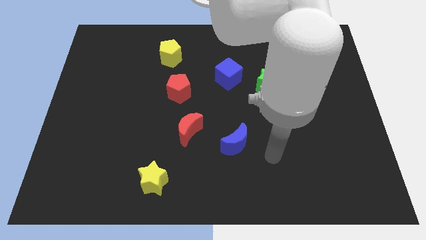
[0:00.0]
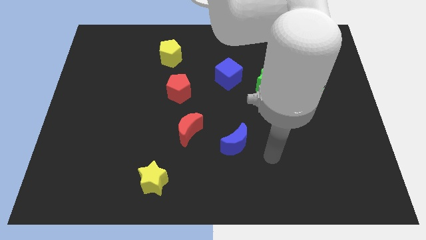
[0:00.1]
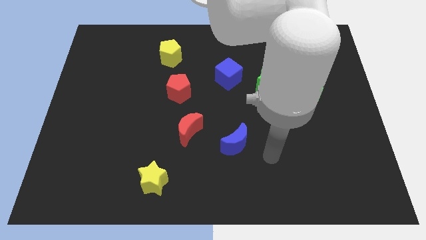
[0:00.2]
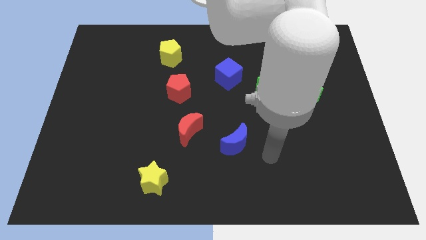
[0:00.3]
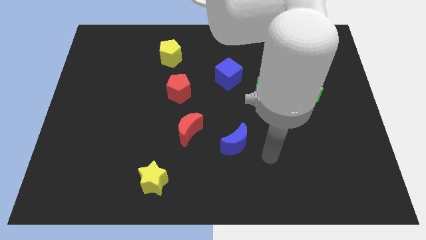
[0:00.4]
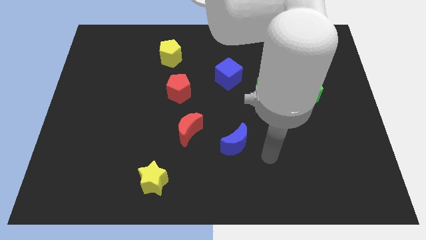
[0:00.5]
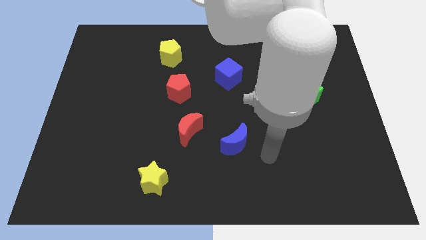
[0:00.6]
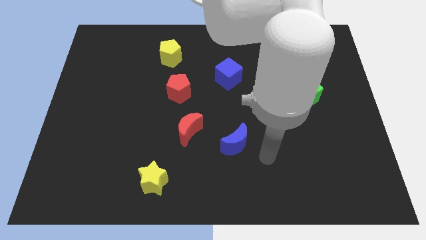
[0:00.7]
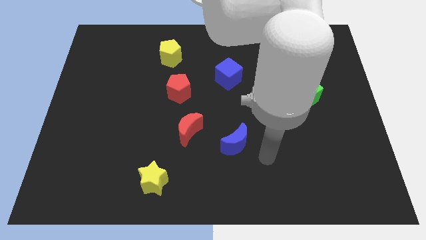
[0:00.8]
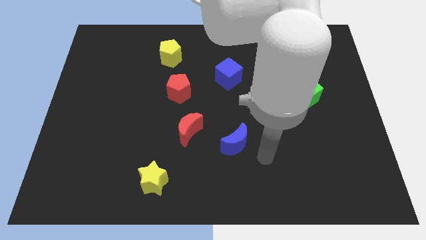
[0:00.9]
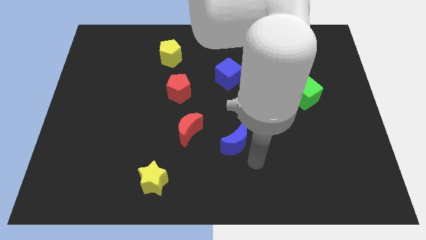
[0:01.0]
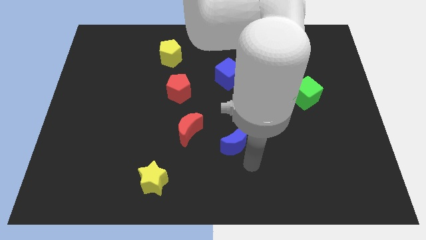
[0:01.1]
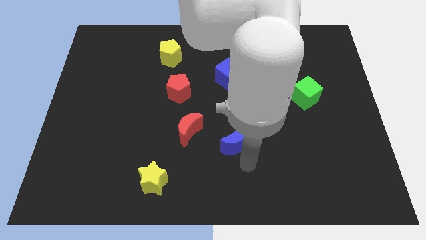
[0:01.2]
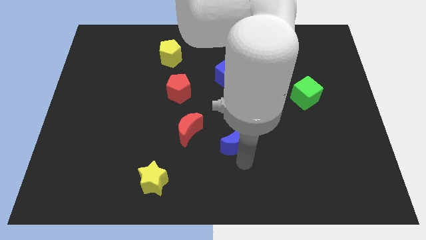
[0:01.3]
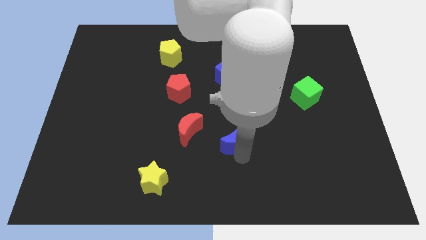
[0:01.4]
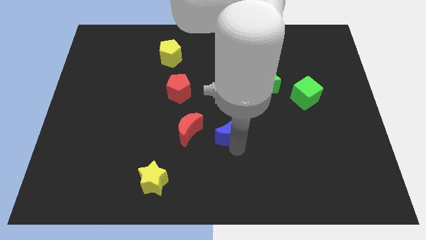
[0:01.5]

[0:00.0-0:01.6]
move the blue crescent slightly to the center of the board

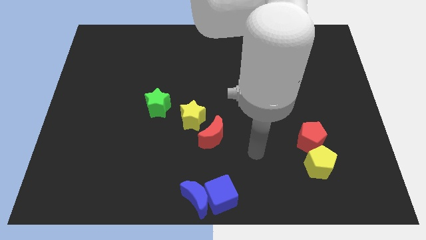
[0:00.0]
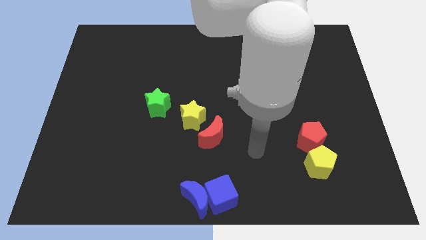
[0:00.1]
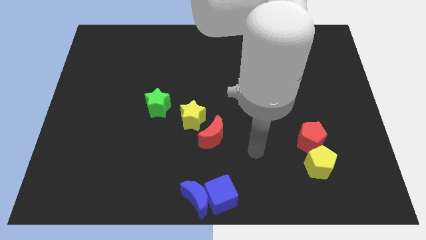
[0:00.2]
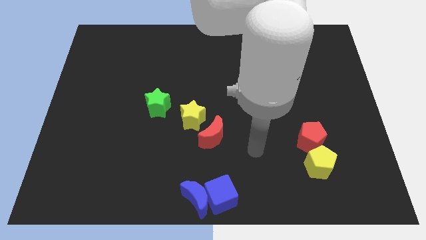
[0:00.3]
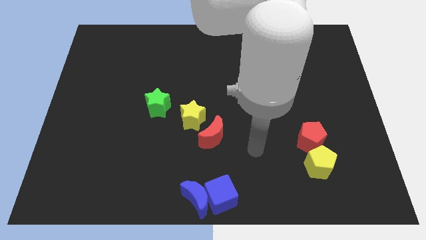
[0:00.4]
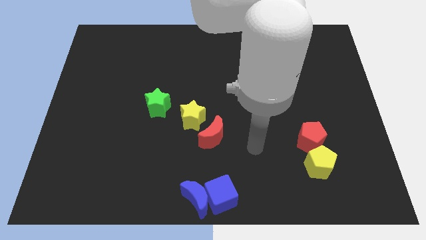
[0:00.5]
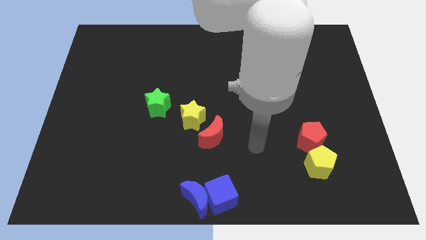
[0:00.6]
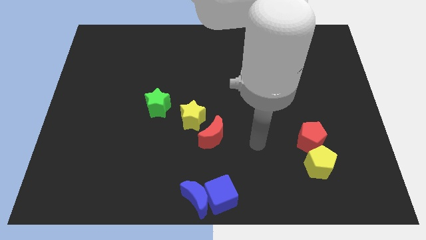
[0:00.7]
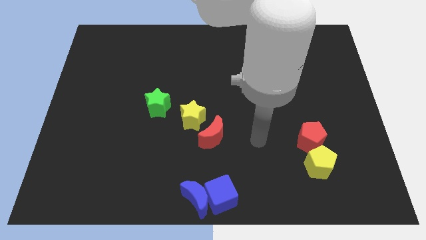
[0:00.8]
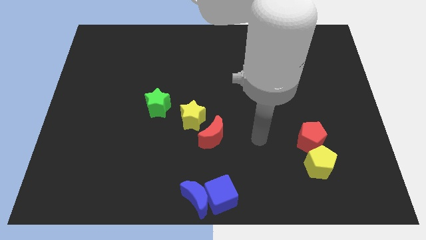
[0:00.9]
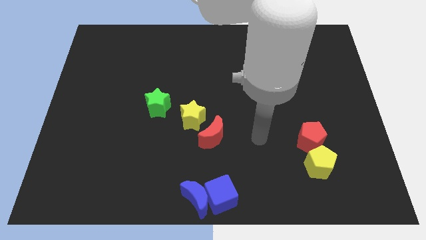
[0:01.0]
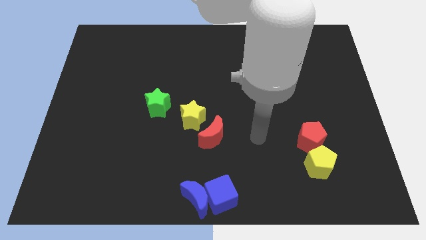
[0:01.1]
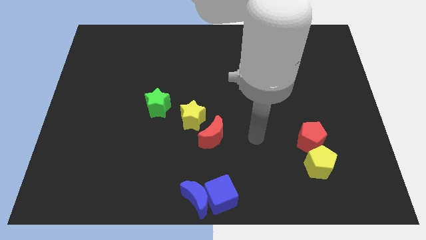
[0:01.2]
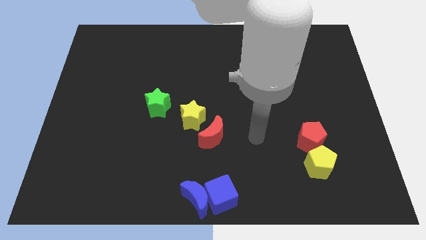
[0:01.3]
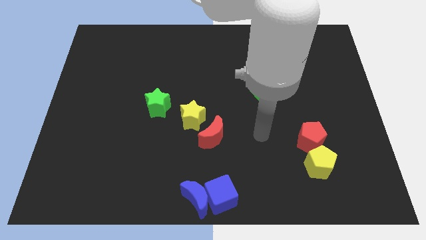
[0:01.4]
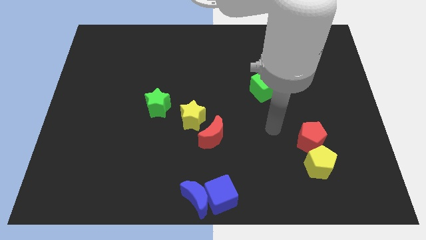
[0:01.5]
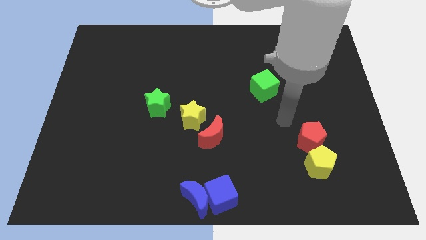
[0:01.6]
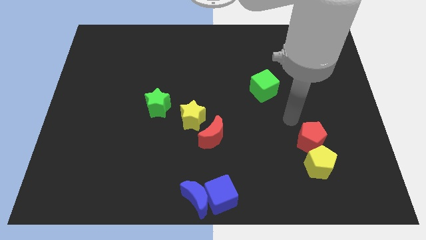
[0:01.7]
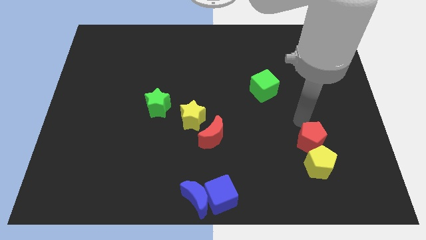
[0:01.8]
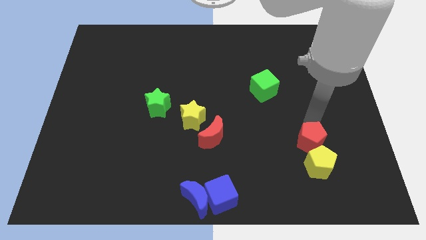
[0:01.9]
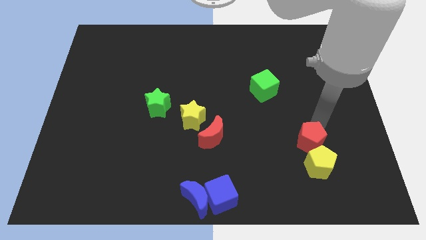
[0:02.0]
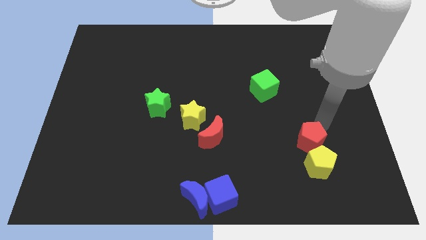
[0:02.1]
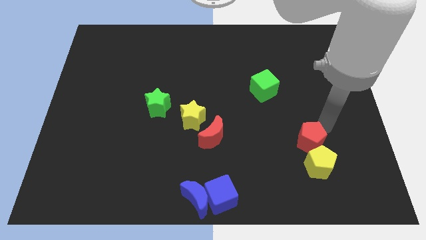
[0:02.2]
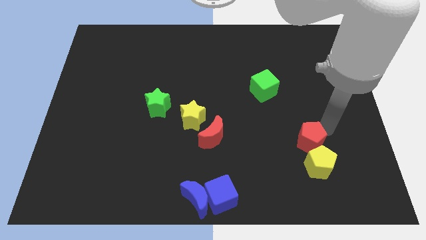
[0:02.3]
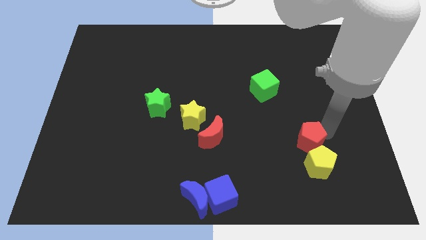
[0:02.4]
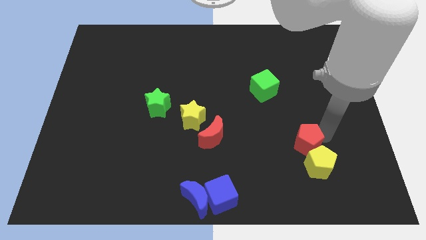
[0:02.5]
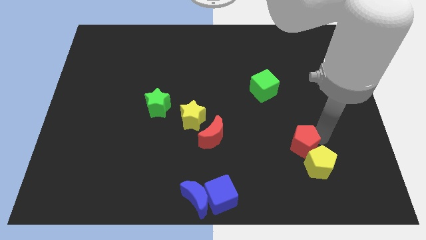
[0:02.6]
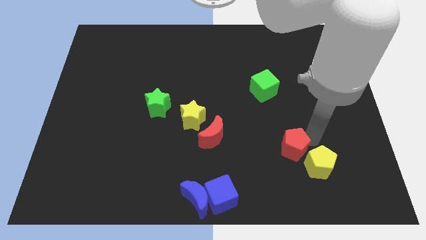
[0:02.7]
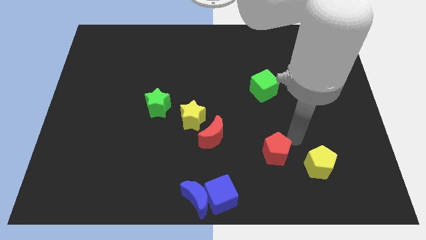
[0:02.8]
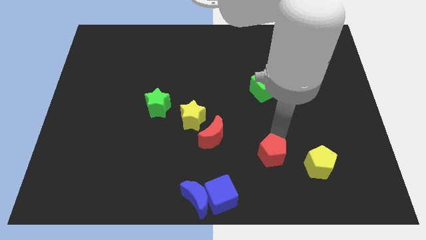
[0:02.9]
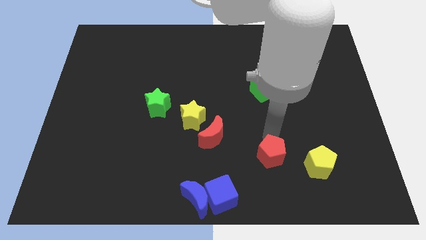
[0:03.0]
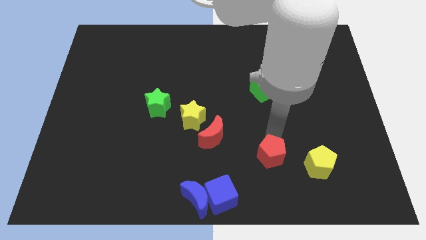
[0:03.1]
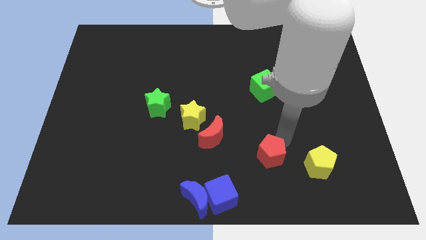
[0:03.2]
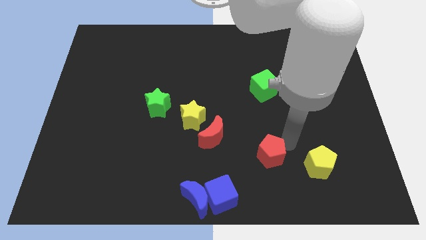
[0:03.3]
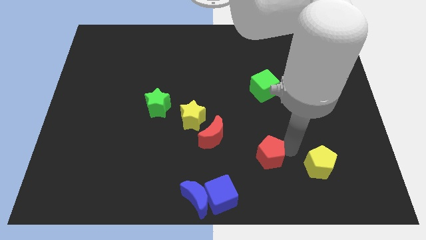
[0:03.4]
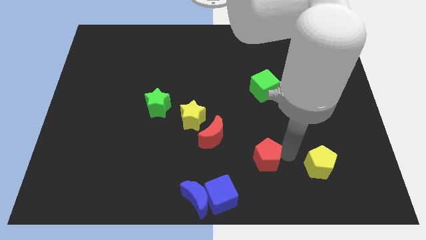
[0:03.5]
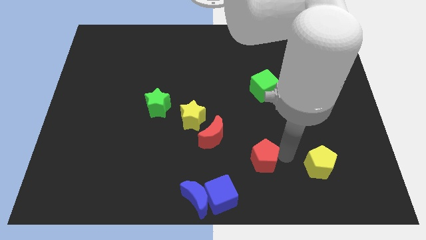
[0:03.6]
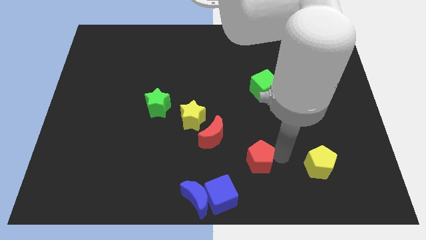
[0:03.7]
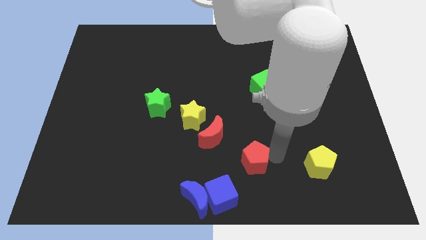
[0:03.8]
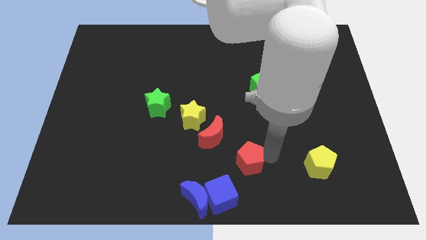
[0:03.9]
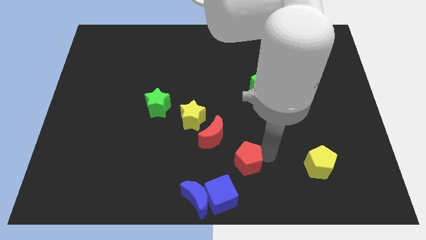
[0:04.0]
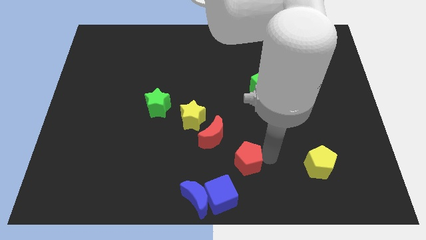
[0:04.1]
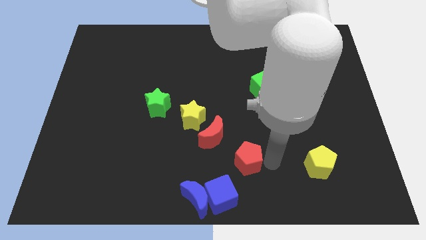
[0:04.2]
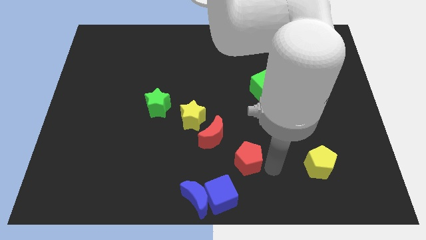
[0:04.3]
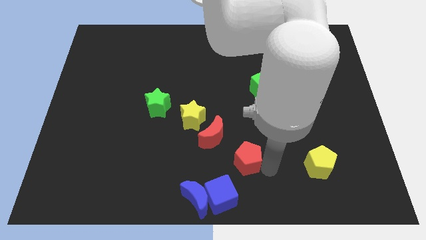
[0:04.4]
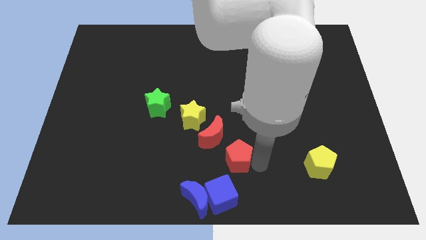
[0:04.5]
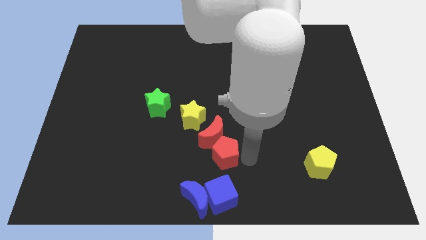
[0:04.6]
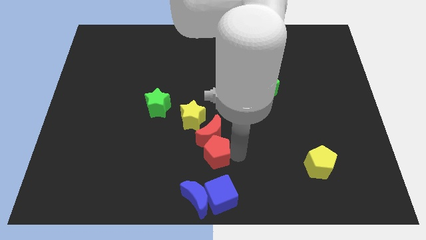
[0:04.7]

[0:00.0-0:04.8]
move the red pentagon towards bottom of the red crescent

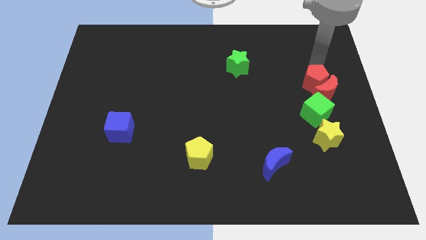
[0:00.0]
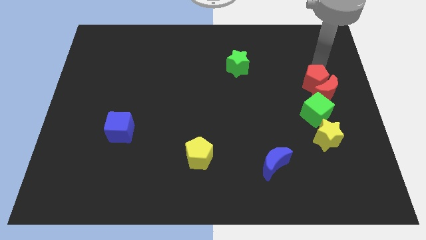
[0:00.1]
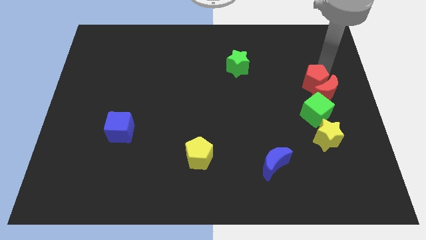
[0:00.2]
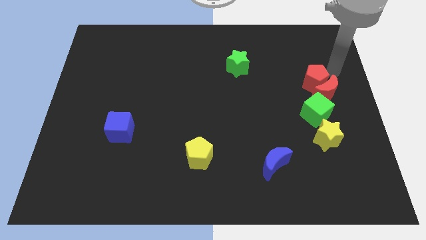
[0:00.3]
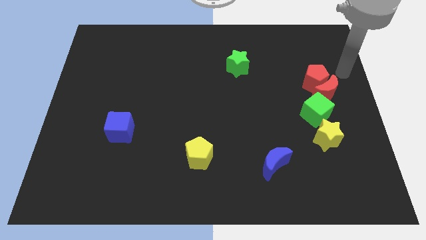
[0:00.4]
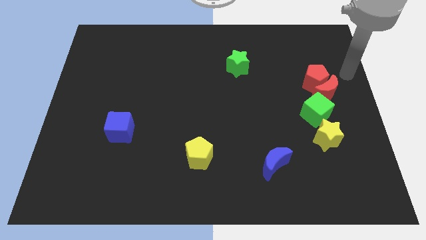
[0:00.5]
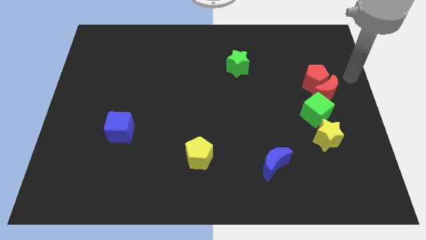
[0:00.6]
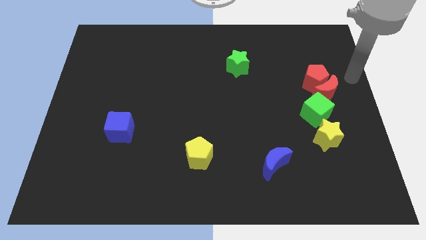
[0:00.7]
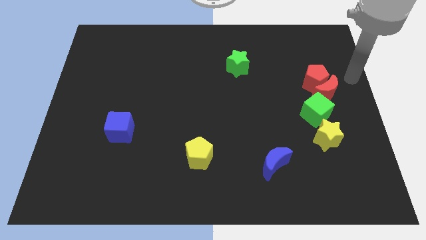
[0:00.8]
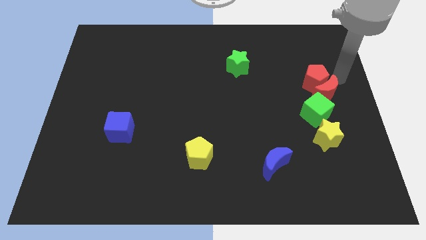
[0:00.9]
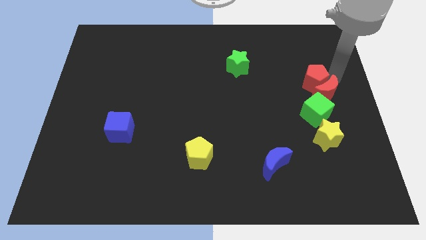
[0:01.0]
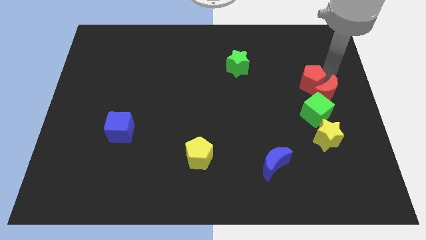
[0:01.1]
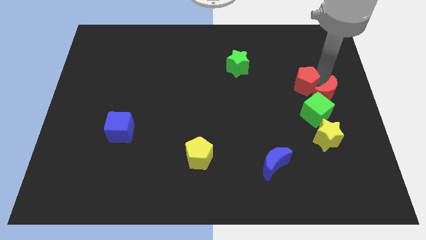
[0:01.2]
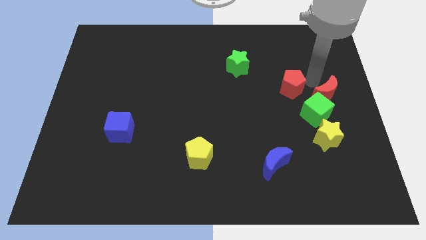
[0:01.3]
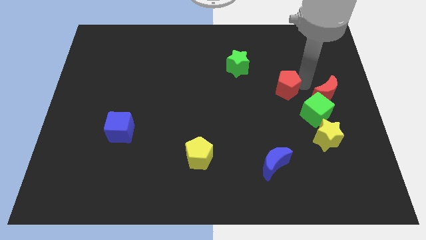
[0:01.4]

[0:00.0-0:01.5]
push red pentagon diagonally towards green cube

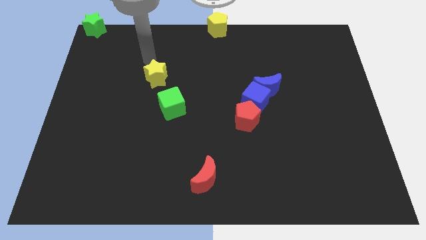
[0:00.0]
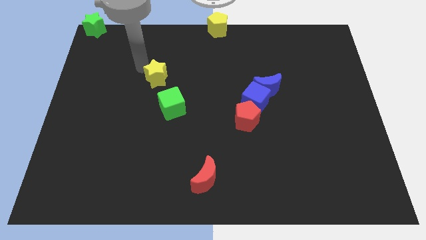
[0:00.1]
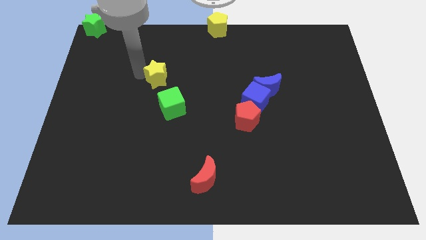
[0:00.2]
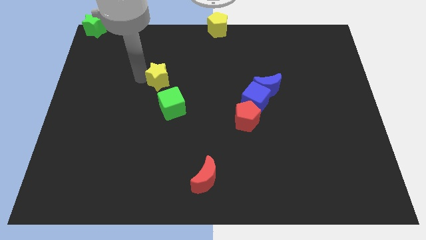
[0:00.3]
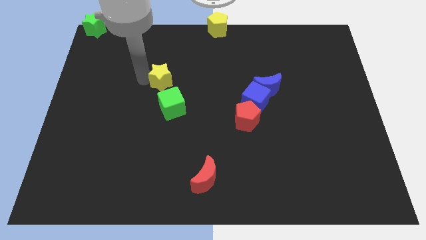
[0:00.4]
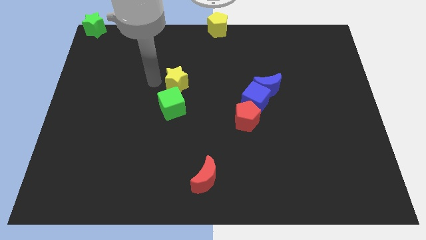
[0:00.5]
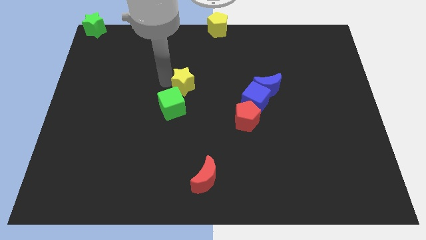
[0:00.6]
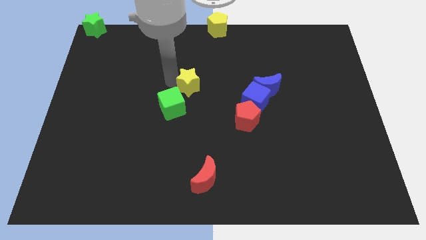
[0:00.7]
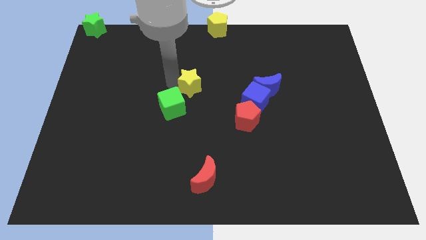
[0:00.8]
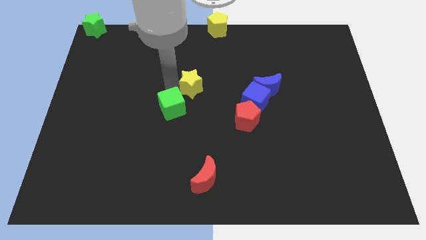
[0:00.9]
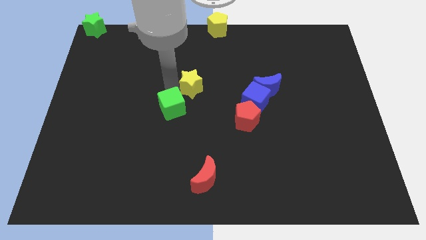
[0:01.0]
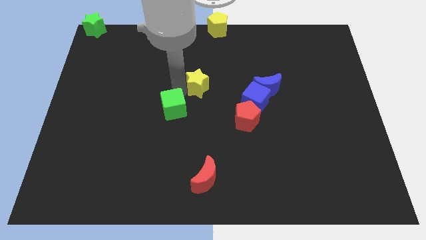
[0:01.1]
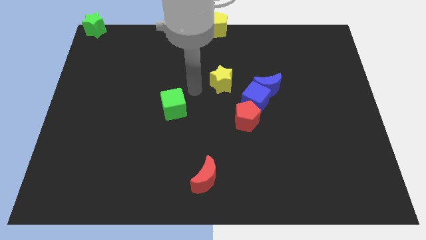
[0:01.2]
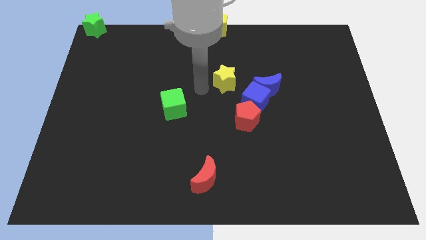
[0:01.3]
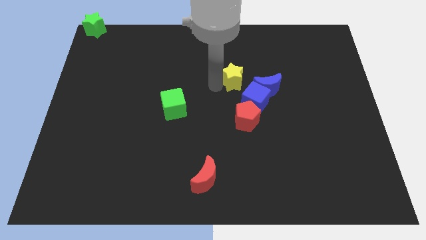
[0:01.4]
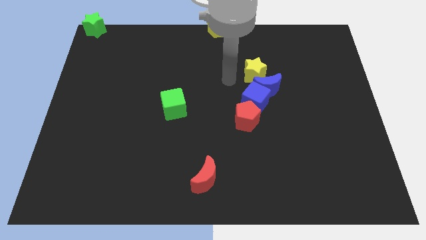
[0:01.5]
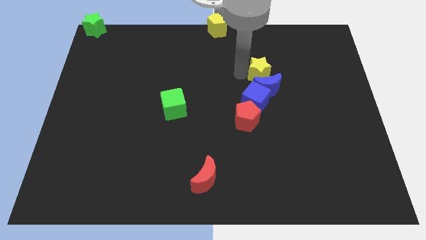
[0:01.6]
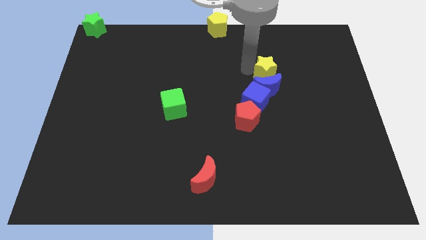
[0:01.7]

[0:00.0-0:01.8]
move the yellow star above the blue crescent
